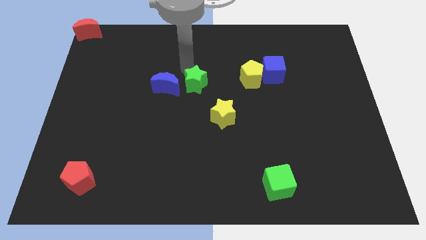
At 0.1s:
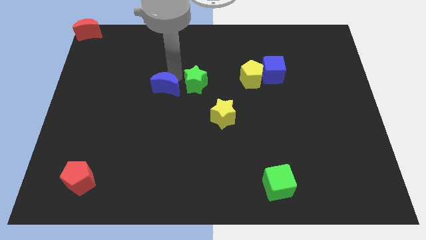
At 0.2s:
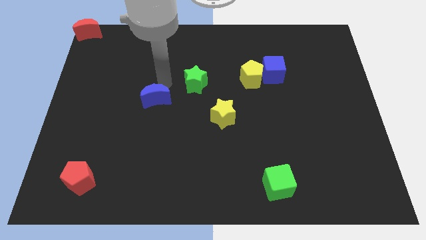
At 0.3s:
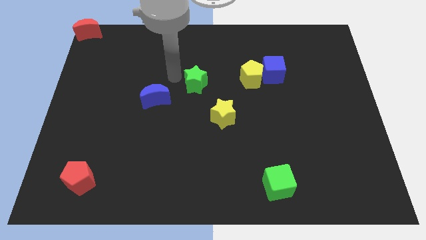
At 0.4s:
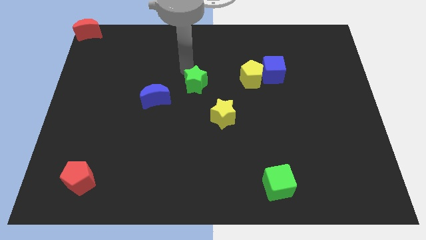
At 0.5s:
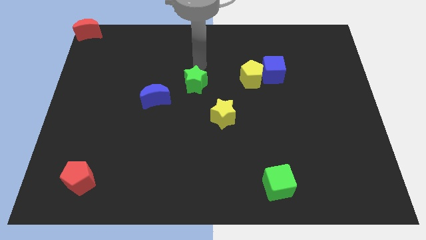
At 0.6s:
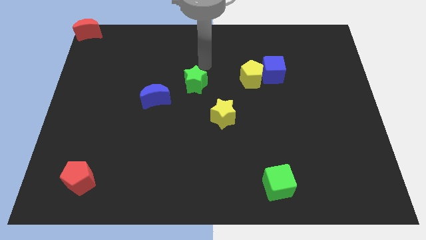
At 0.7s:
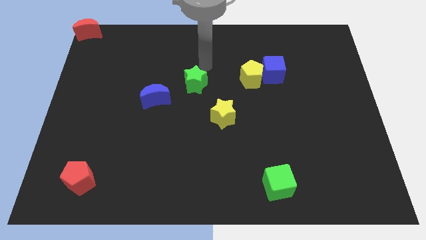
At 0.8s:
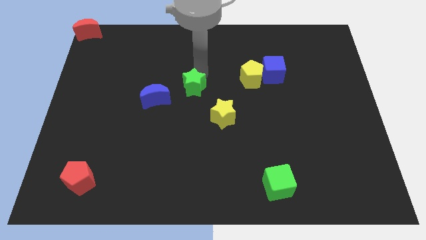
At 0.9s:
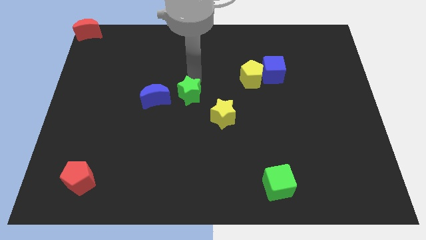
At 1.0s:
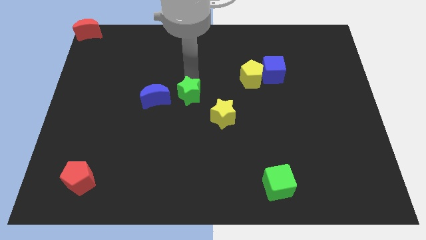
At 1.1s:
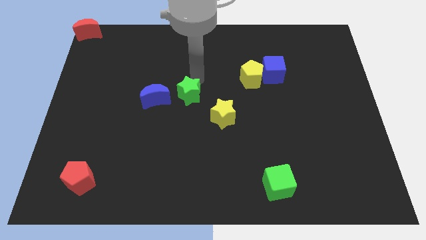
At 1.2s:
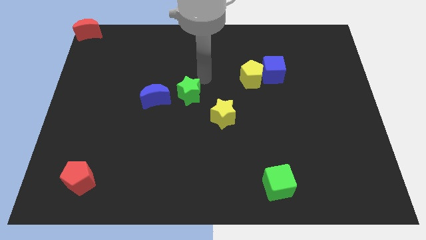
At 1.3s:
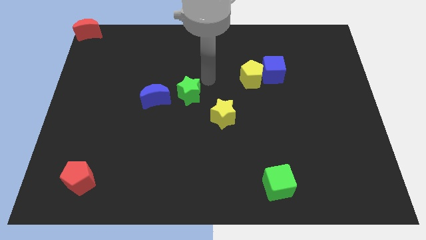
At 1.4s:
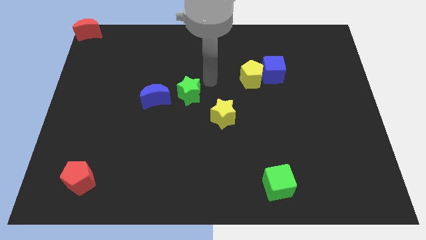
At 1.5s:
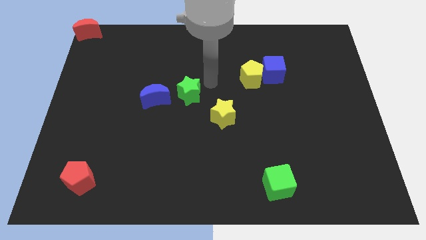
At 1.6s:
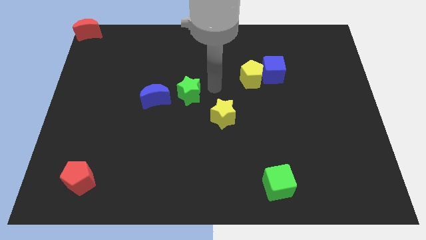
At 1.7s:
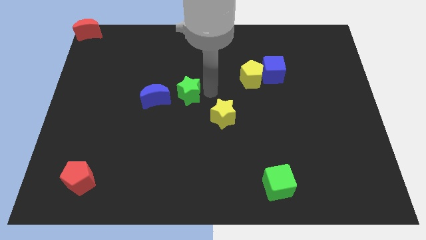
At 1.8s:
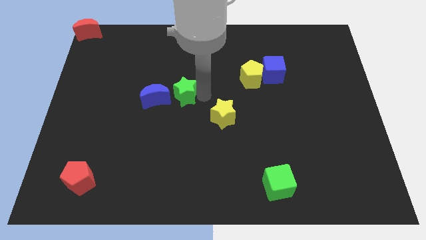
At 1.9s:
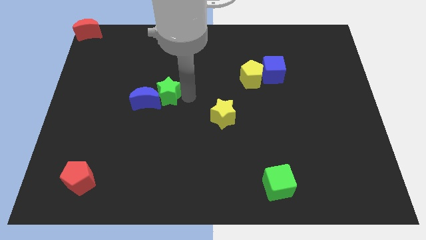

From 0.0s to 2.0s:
slide the green star into the blue moon

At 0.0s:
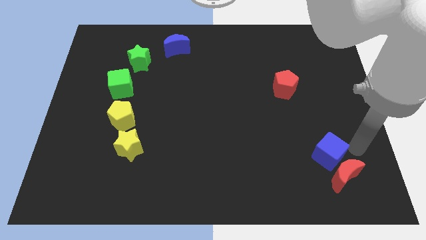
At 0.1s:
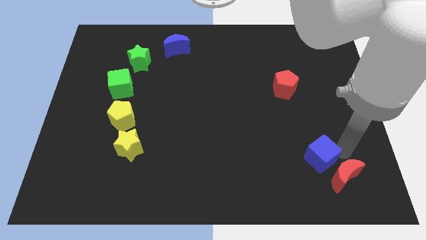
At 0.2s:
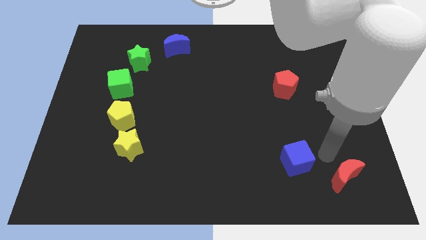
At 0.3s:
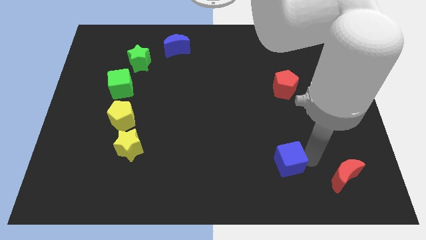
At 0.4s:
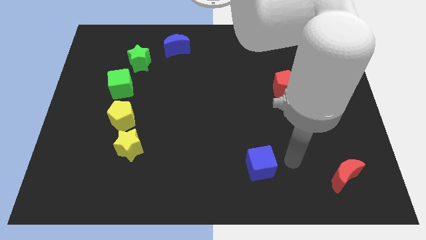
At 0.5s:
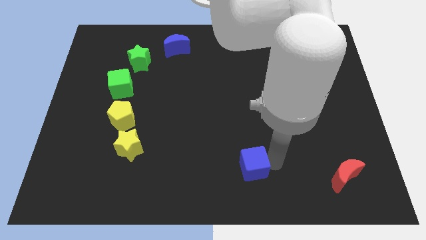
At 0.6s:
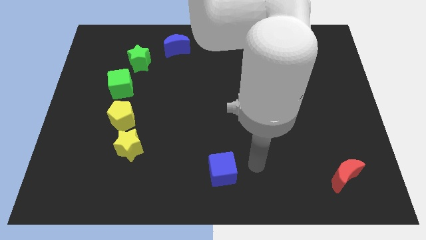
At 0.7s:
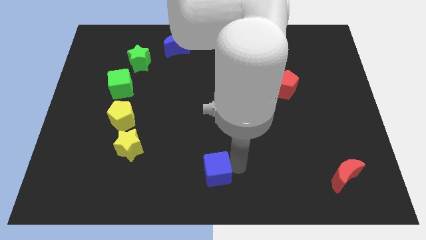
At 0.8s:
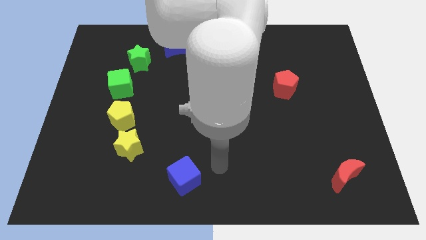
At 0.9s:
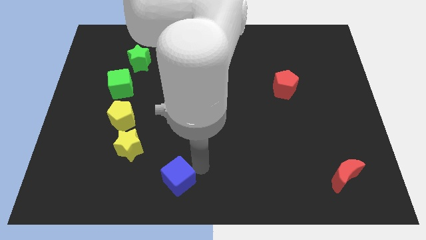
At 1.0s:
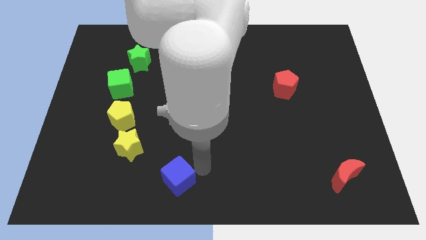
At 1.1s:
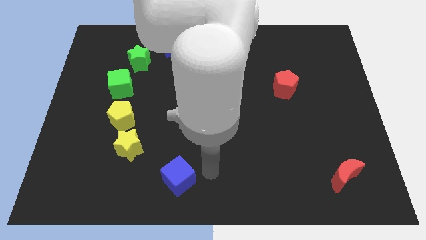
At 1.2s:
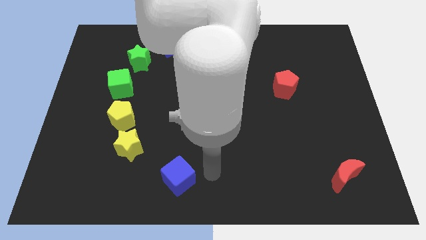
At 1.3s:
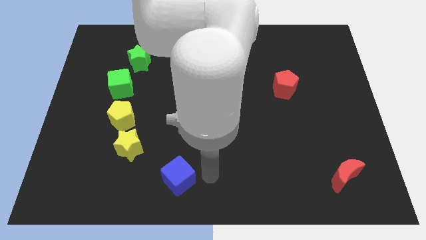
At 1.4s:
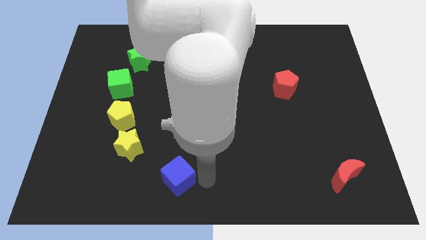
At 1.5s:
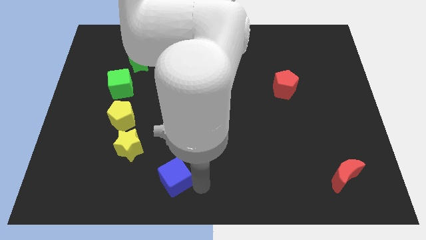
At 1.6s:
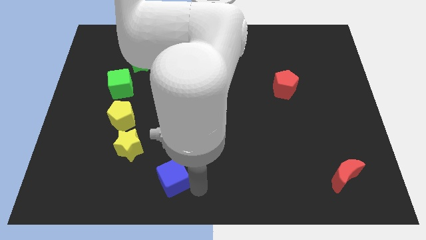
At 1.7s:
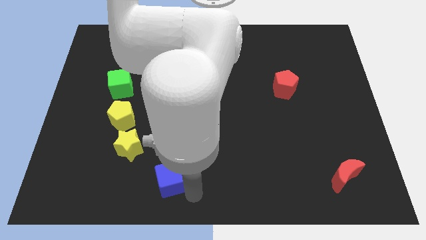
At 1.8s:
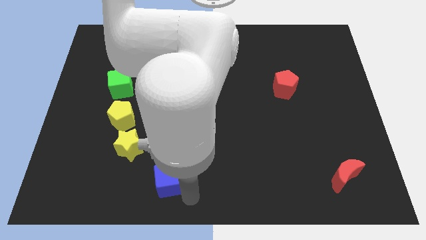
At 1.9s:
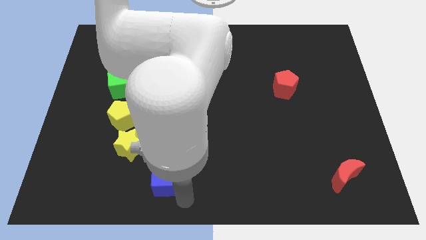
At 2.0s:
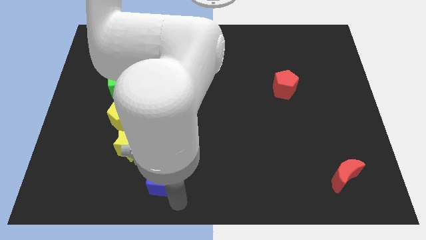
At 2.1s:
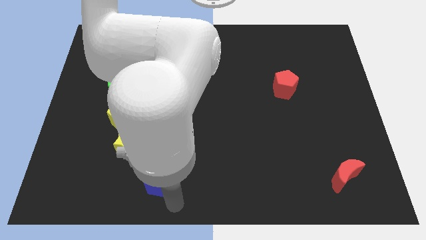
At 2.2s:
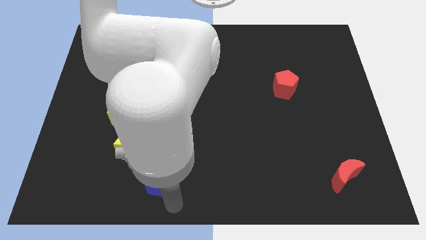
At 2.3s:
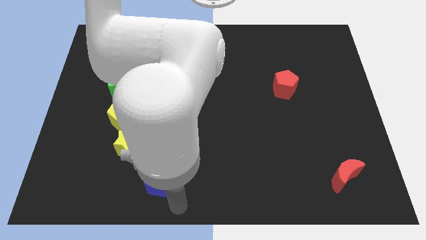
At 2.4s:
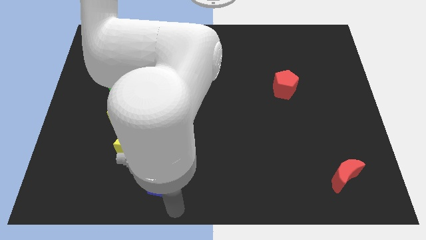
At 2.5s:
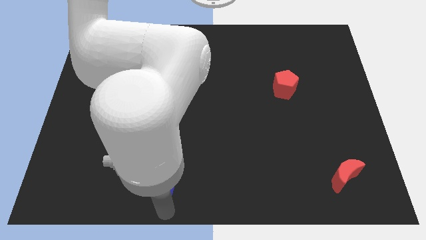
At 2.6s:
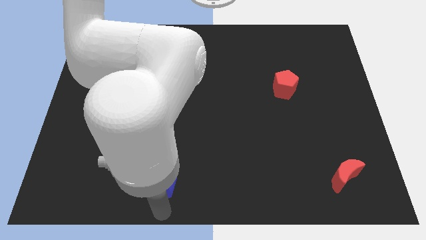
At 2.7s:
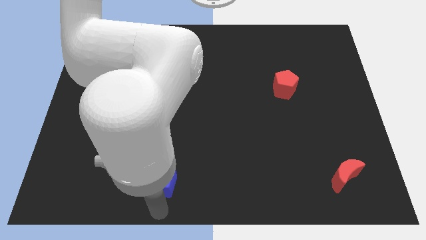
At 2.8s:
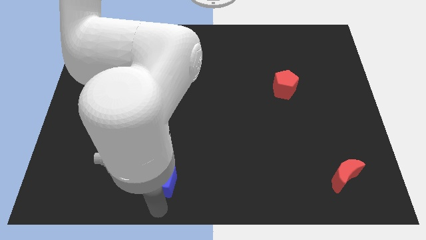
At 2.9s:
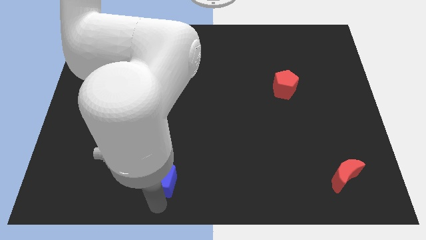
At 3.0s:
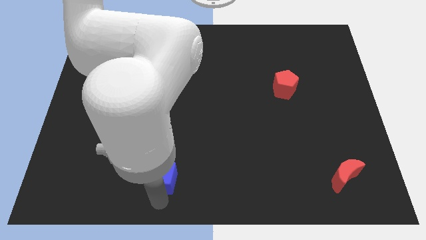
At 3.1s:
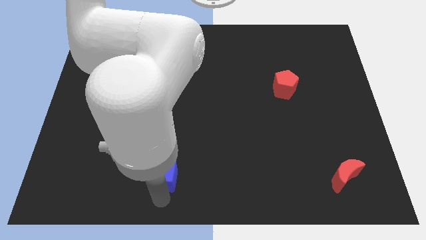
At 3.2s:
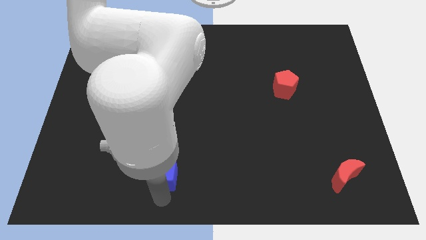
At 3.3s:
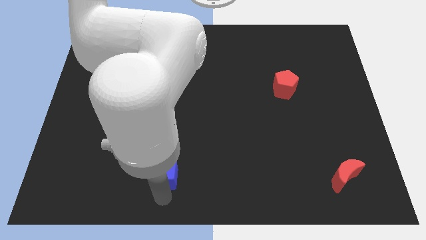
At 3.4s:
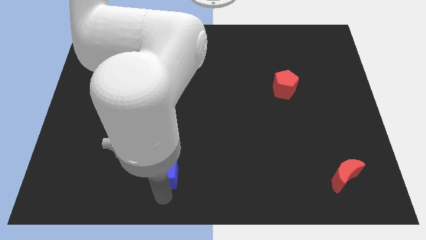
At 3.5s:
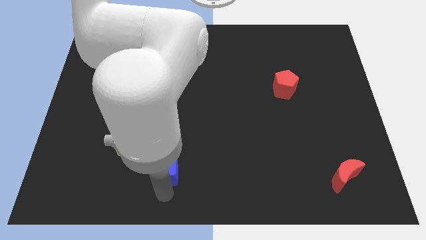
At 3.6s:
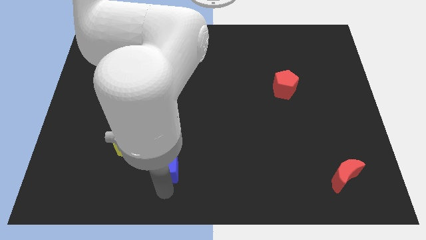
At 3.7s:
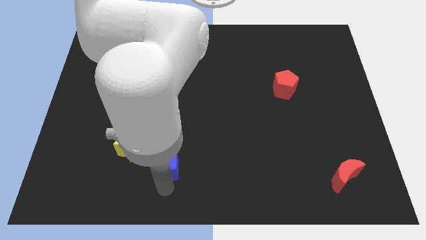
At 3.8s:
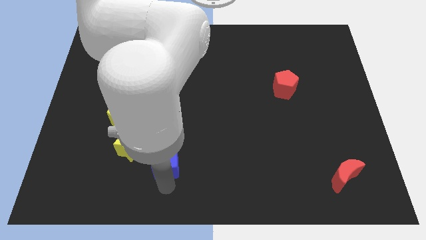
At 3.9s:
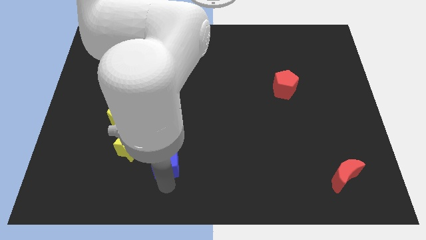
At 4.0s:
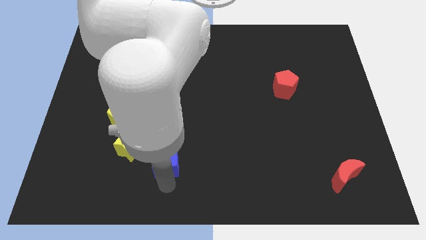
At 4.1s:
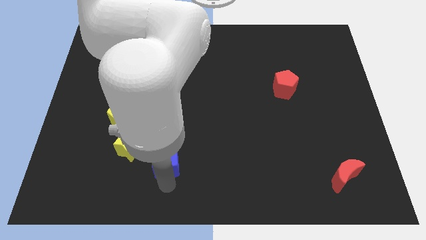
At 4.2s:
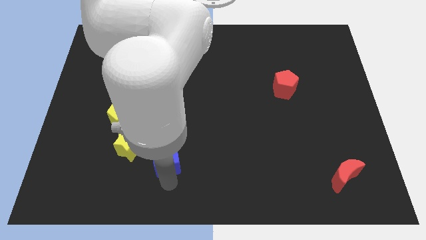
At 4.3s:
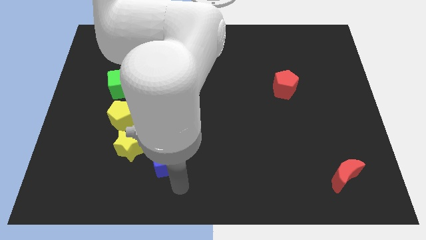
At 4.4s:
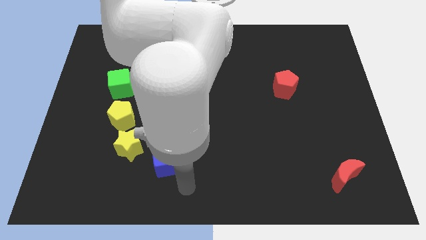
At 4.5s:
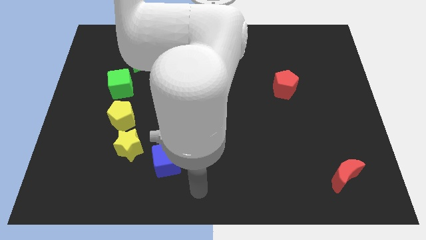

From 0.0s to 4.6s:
drag blue cube near yellow star

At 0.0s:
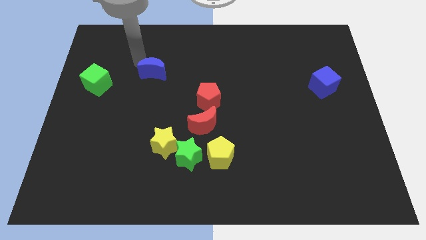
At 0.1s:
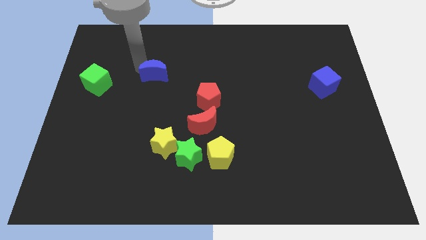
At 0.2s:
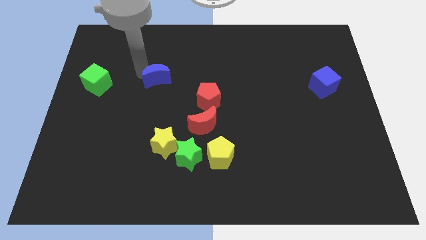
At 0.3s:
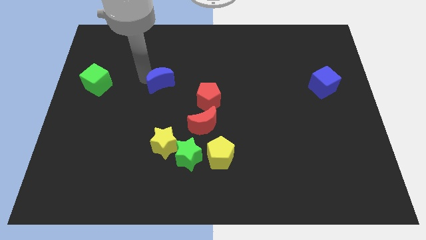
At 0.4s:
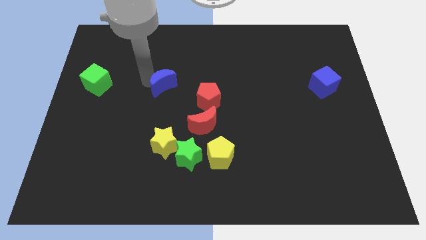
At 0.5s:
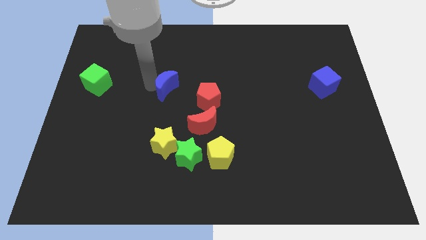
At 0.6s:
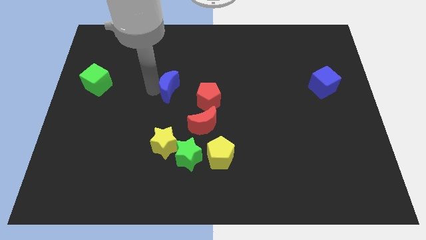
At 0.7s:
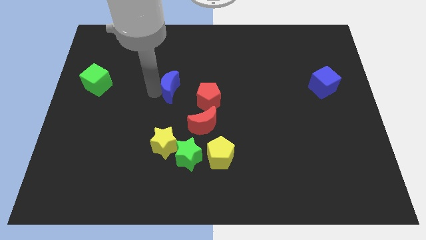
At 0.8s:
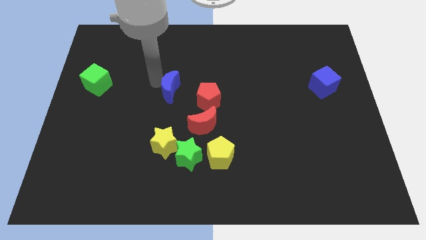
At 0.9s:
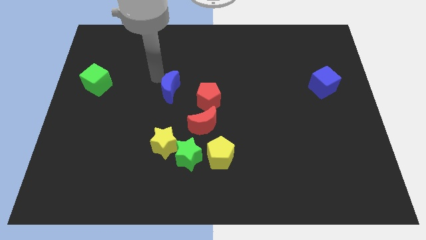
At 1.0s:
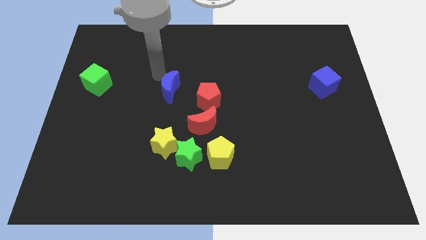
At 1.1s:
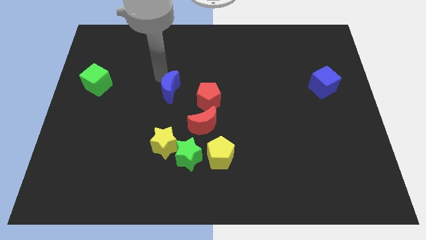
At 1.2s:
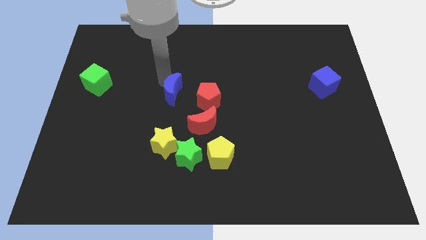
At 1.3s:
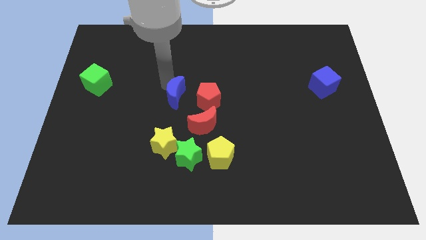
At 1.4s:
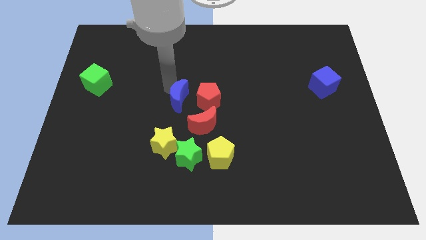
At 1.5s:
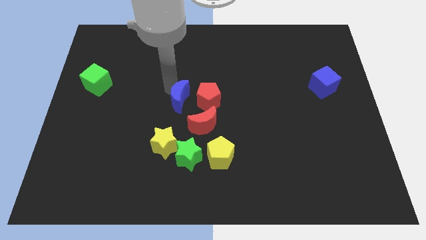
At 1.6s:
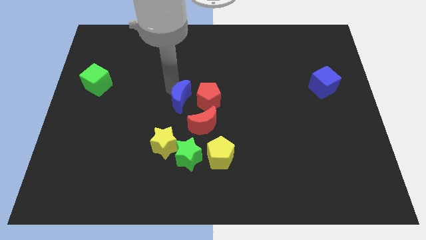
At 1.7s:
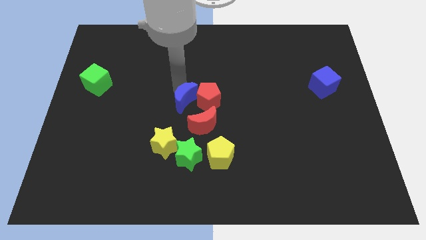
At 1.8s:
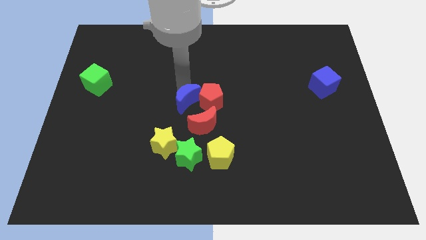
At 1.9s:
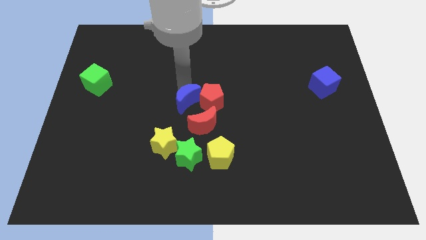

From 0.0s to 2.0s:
make the blue crescent to touch the left side of the red pentagon

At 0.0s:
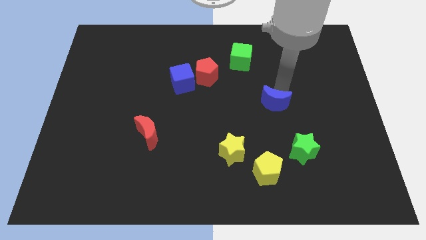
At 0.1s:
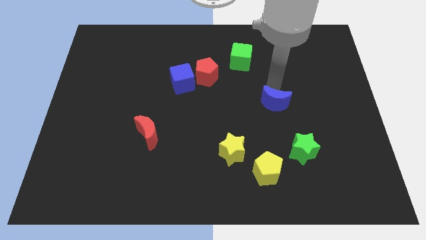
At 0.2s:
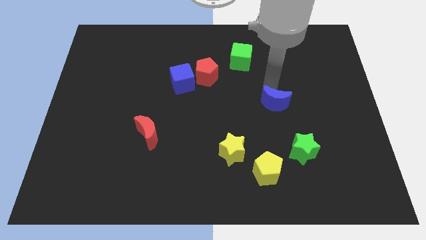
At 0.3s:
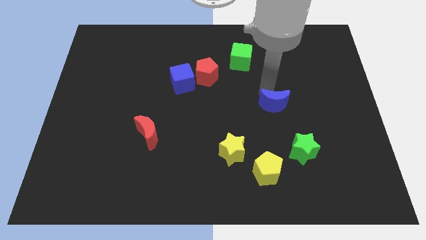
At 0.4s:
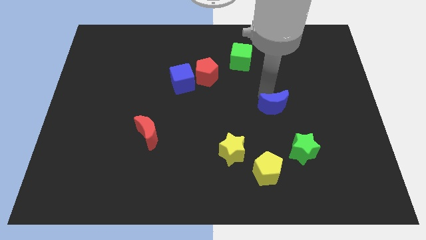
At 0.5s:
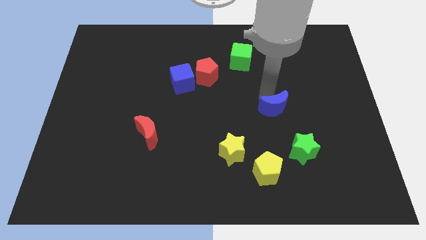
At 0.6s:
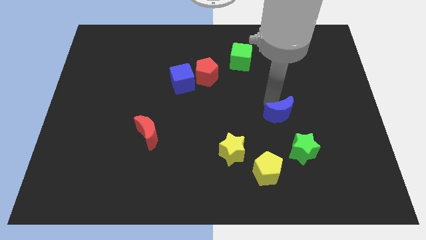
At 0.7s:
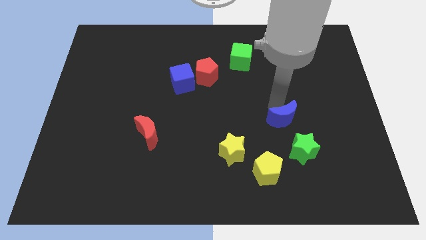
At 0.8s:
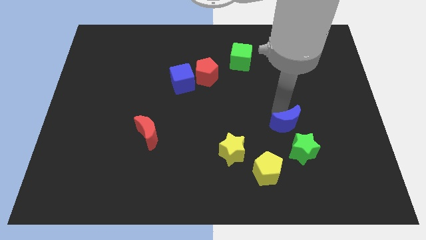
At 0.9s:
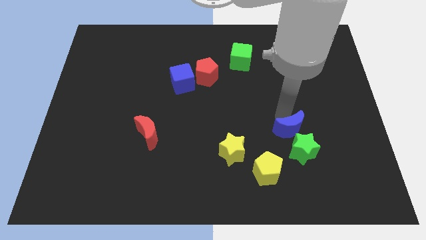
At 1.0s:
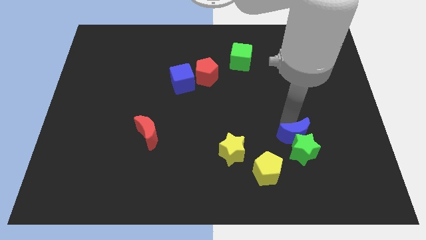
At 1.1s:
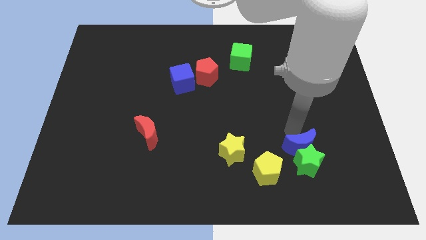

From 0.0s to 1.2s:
push the blue moon into the green star
